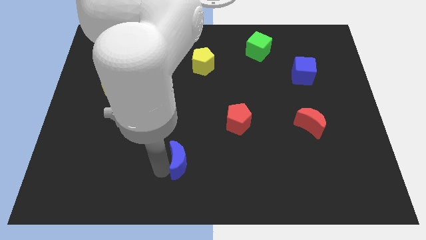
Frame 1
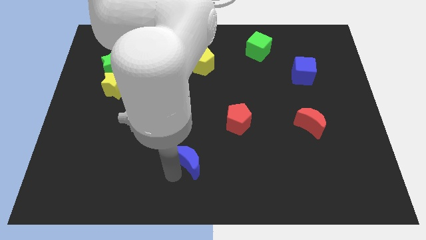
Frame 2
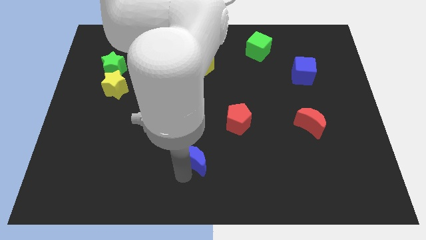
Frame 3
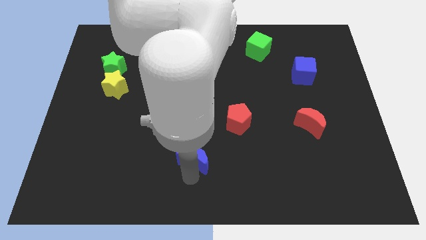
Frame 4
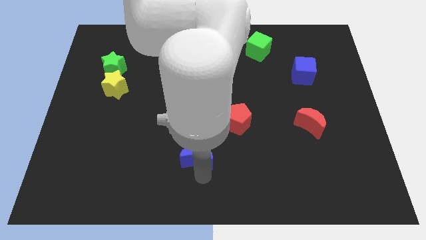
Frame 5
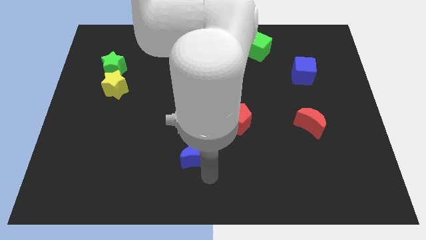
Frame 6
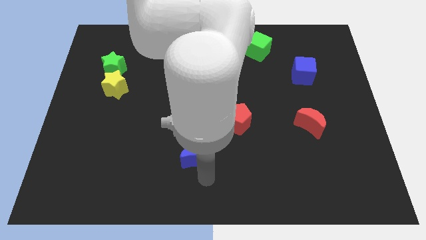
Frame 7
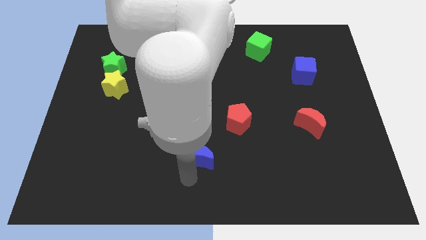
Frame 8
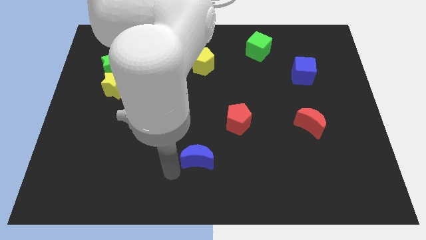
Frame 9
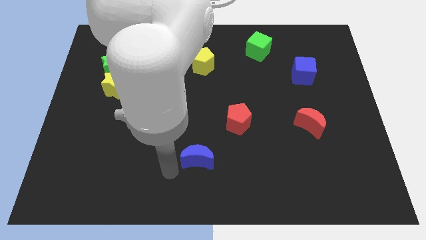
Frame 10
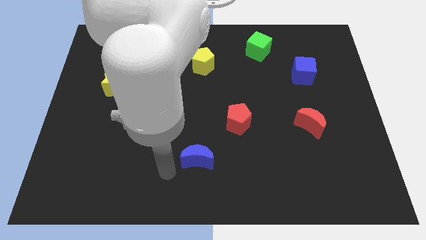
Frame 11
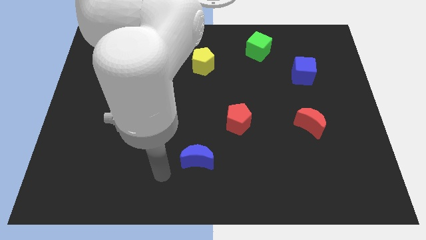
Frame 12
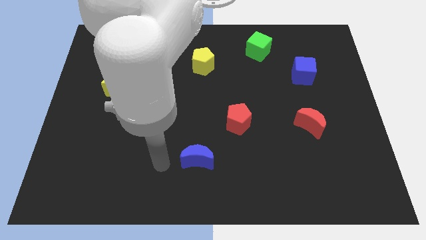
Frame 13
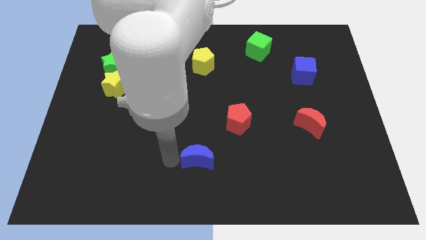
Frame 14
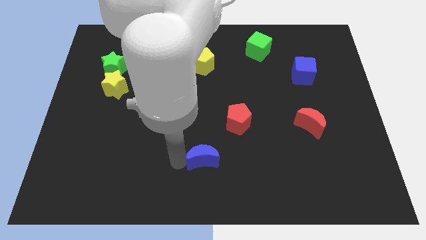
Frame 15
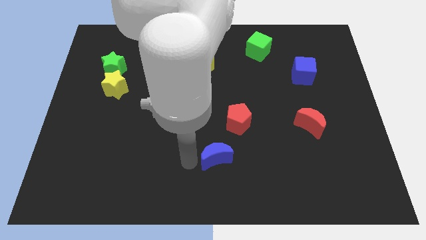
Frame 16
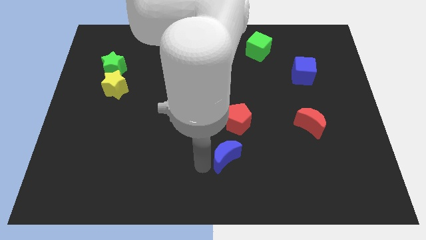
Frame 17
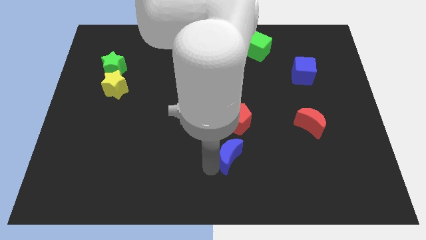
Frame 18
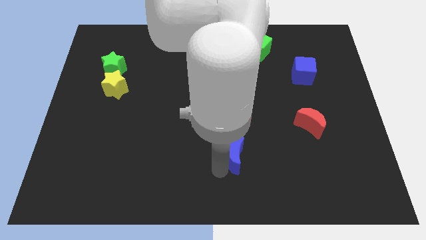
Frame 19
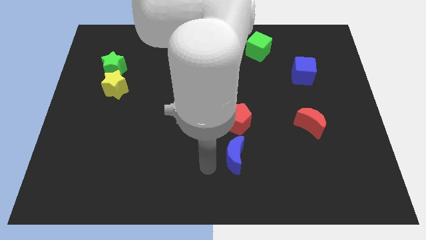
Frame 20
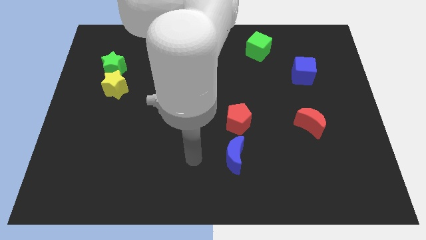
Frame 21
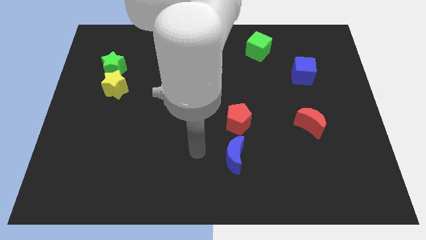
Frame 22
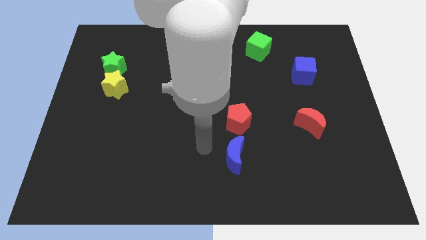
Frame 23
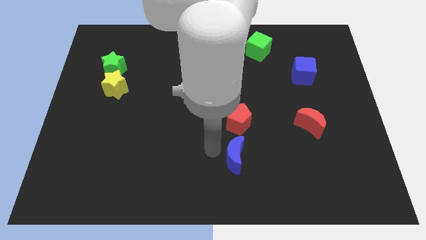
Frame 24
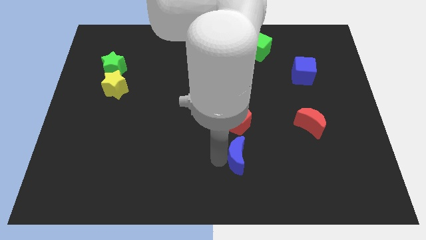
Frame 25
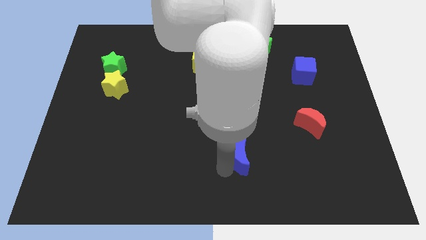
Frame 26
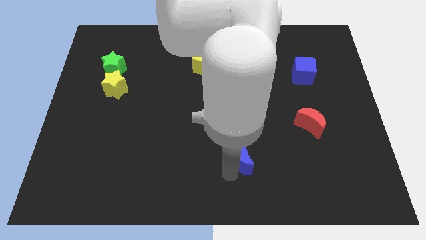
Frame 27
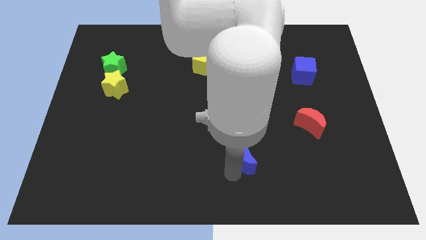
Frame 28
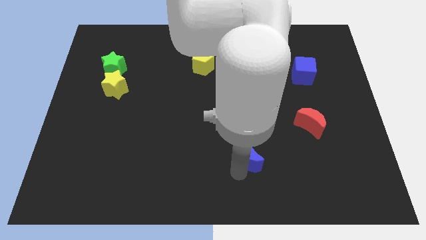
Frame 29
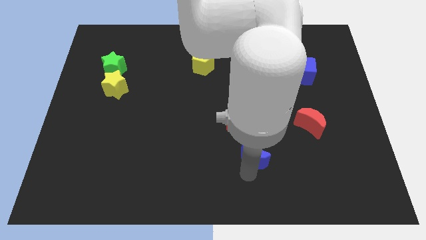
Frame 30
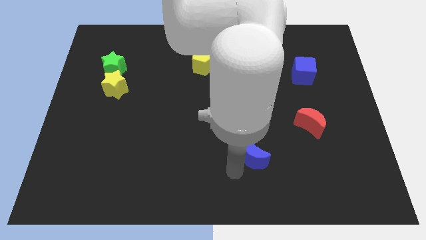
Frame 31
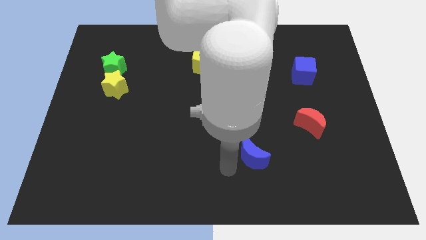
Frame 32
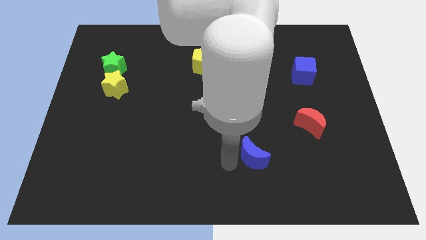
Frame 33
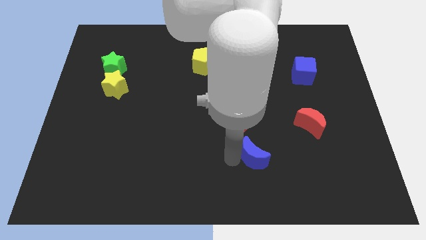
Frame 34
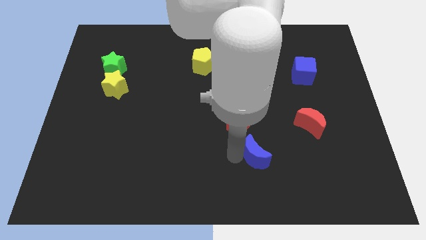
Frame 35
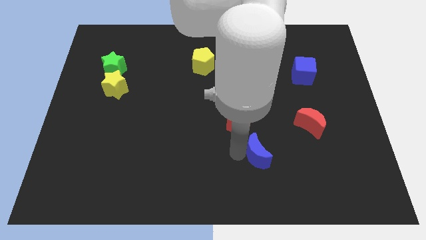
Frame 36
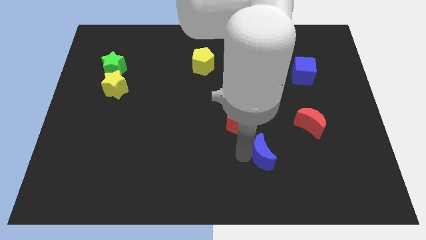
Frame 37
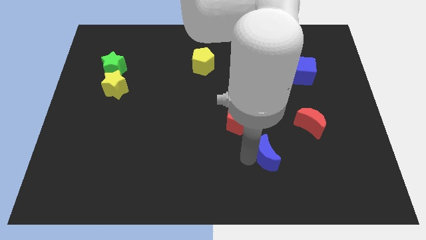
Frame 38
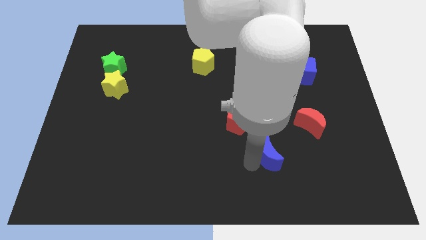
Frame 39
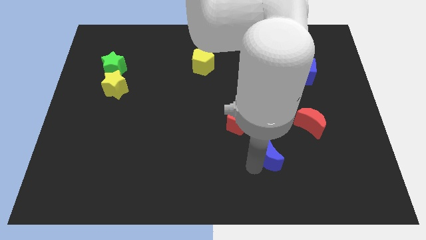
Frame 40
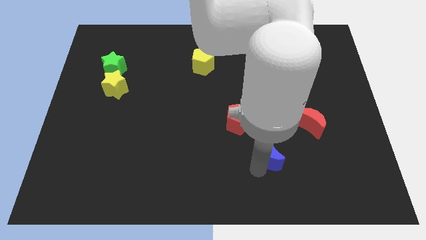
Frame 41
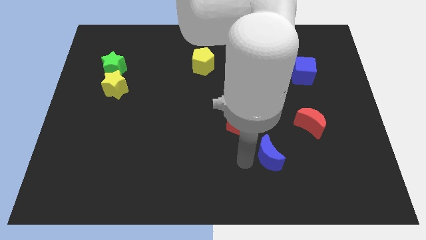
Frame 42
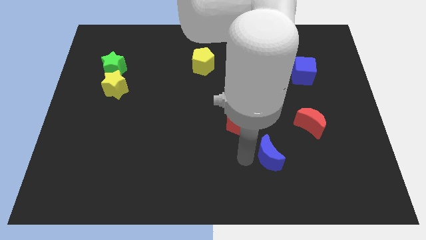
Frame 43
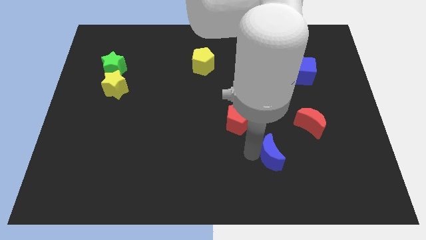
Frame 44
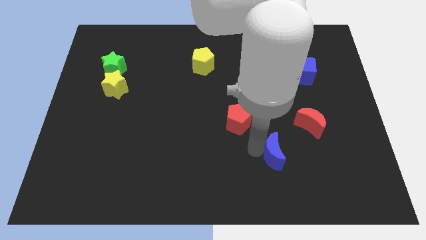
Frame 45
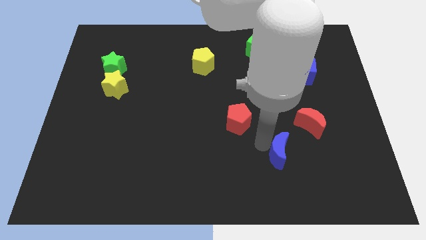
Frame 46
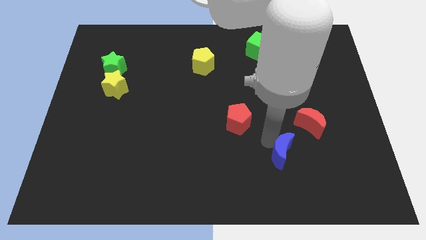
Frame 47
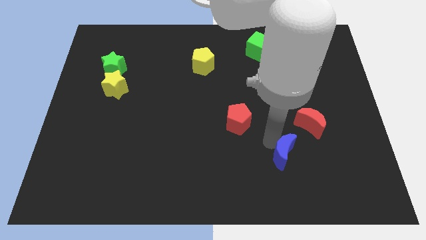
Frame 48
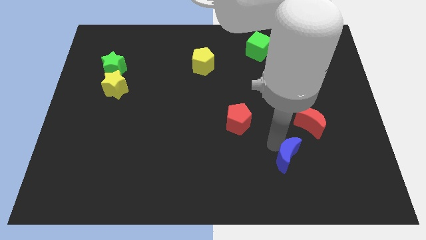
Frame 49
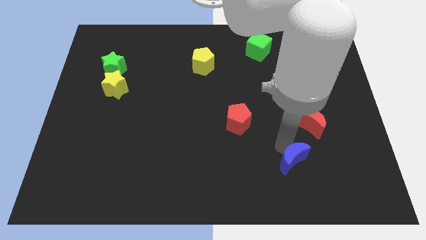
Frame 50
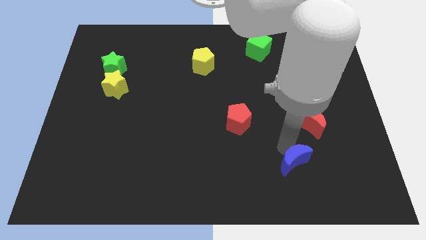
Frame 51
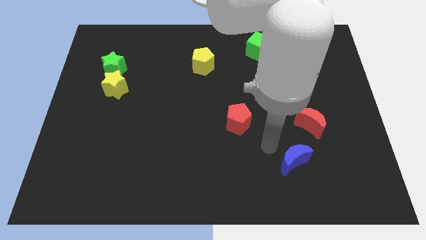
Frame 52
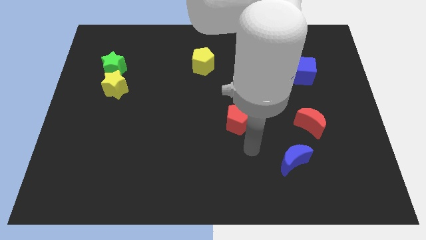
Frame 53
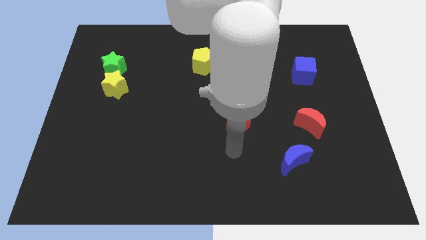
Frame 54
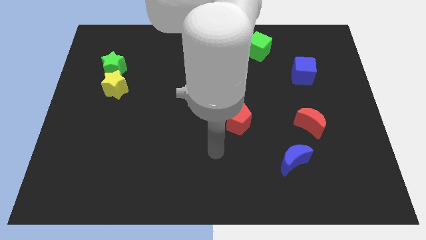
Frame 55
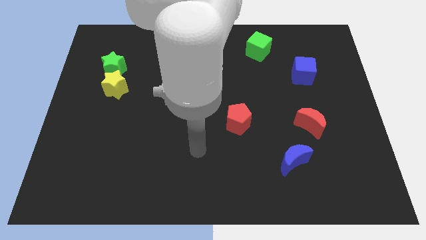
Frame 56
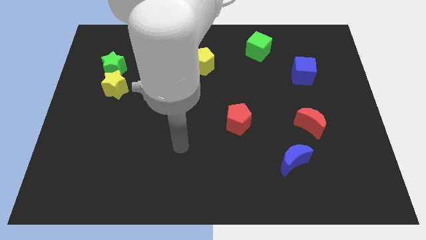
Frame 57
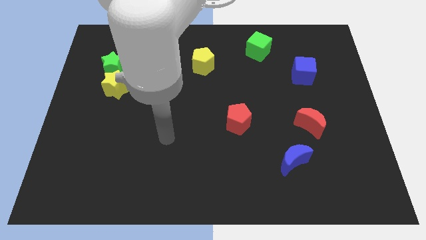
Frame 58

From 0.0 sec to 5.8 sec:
place the blue crescent below the red crescent

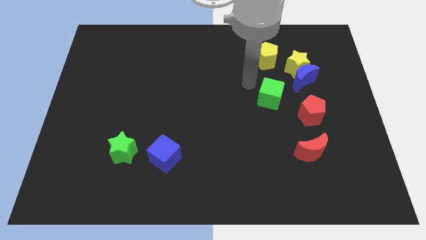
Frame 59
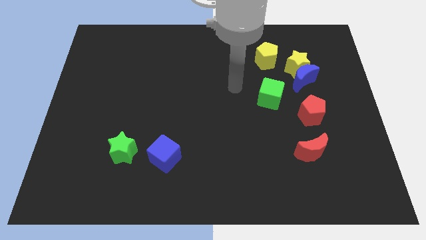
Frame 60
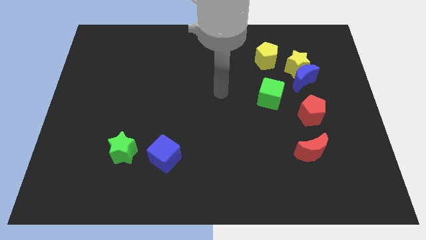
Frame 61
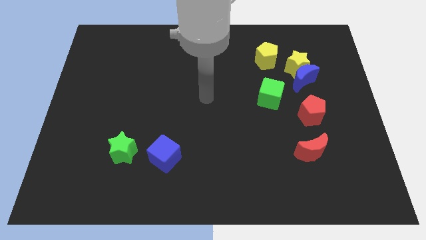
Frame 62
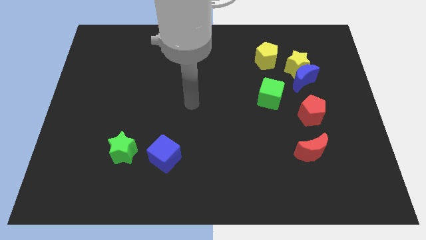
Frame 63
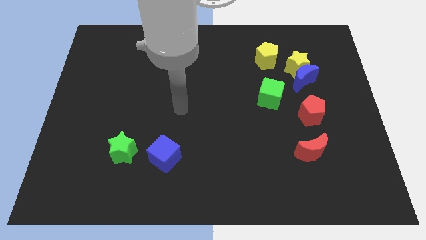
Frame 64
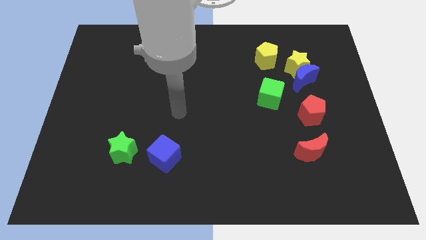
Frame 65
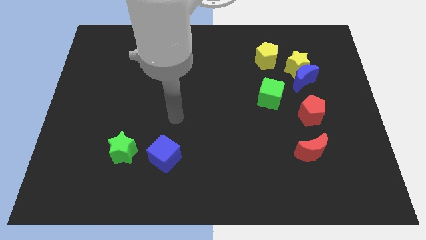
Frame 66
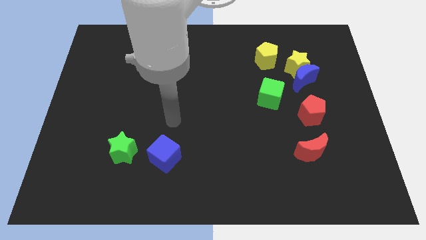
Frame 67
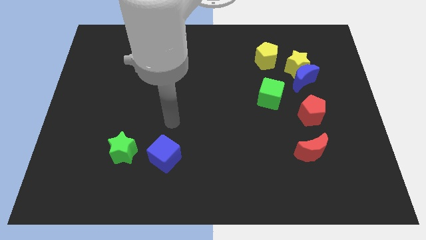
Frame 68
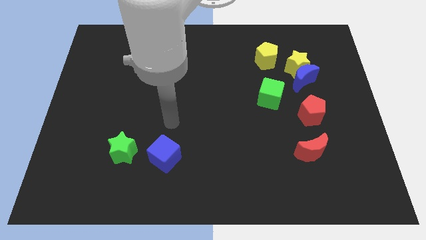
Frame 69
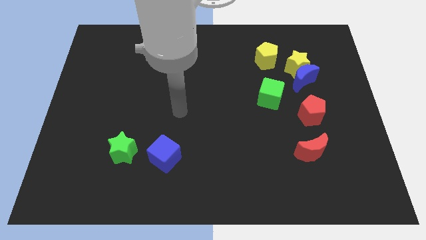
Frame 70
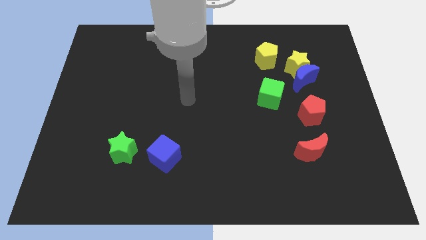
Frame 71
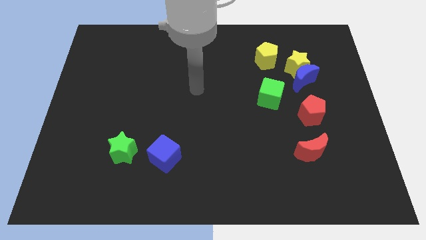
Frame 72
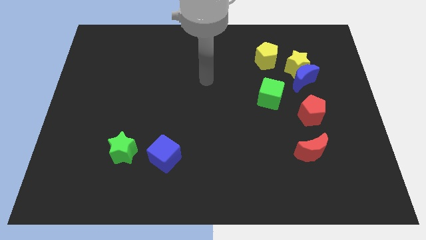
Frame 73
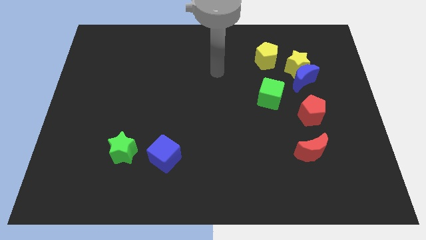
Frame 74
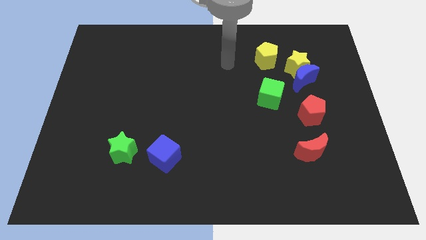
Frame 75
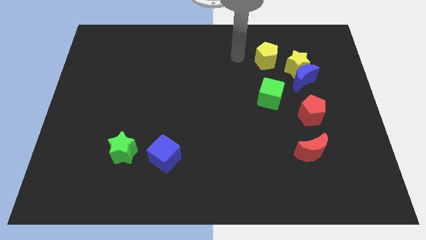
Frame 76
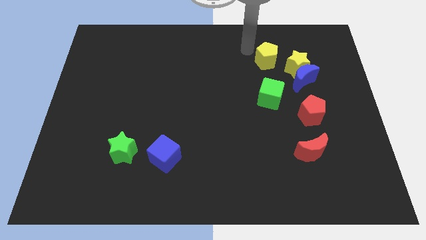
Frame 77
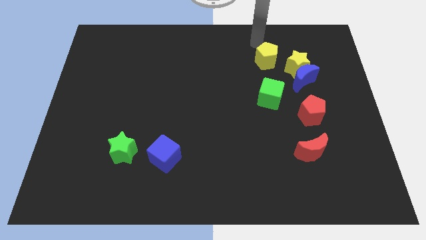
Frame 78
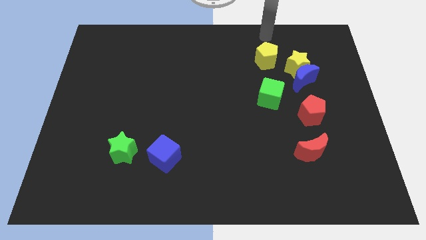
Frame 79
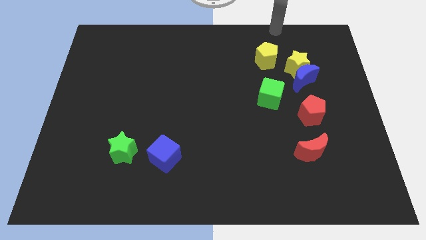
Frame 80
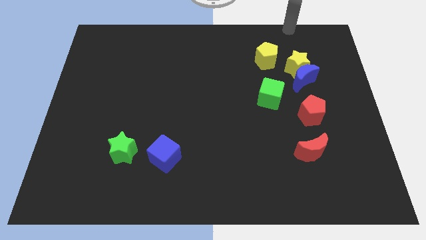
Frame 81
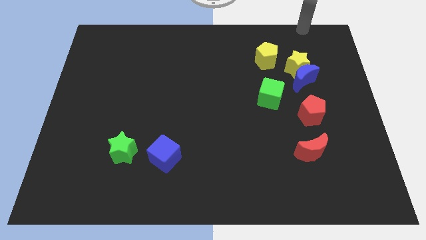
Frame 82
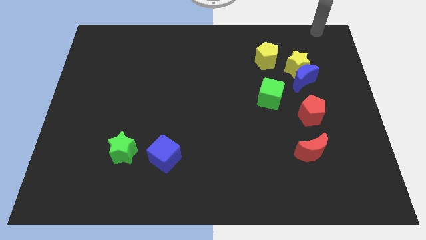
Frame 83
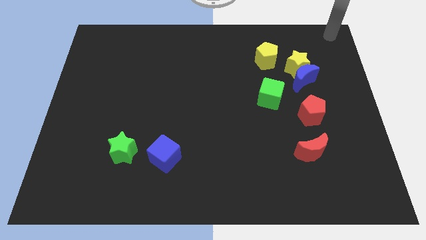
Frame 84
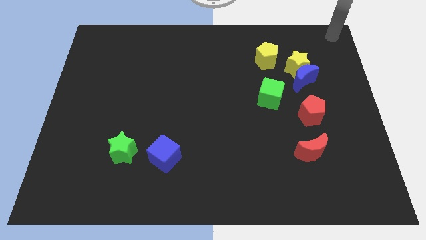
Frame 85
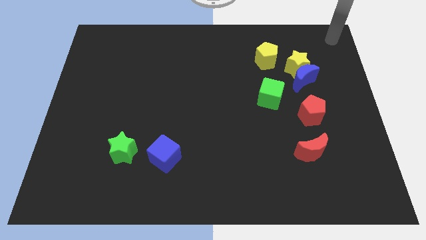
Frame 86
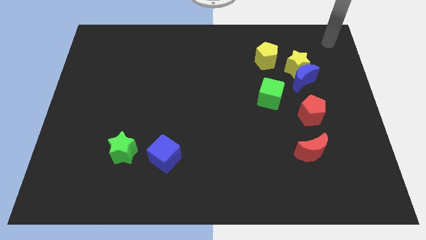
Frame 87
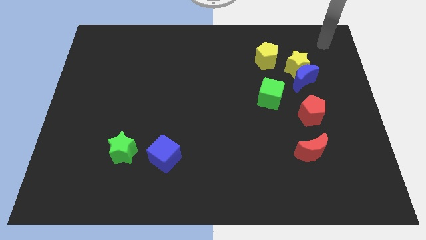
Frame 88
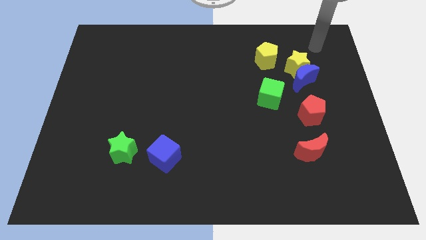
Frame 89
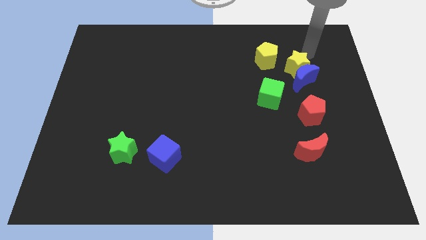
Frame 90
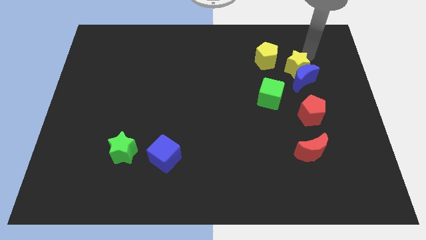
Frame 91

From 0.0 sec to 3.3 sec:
move the arm to the top right of the yellow star

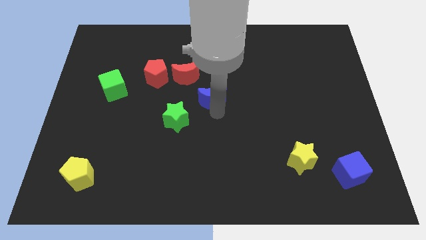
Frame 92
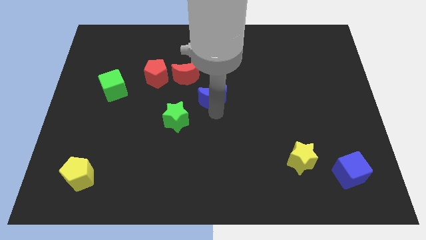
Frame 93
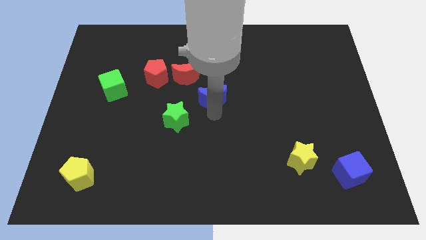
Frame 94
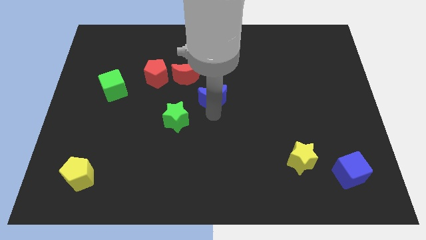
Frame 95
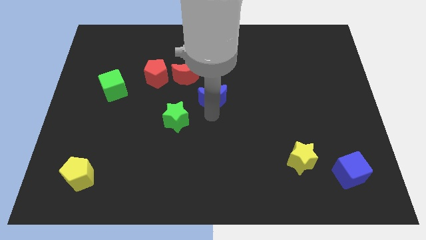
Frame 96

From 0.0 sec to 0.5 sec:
push the blue moon to the center of the board
